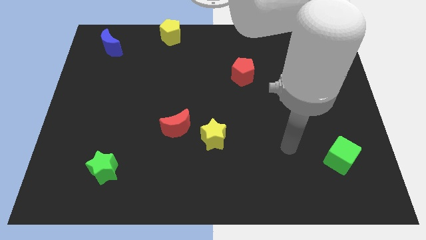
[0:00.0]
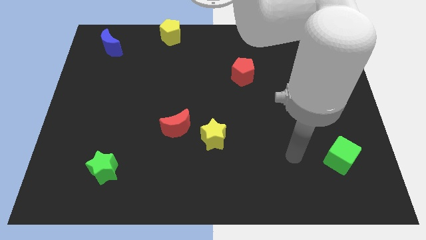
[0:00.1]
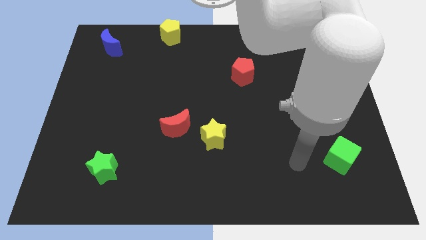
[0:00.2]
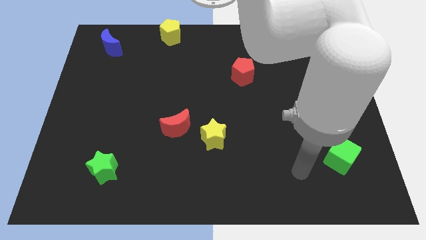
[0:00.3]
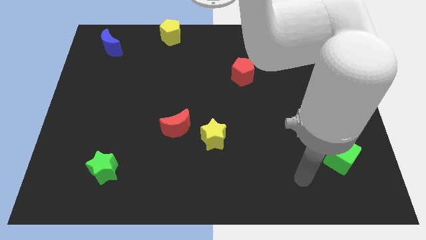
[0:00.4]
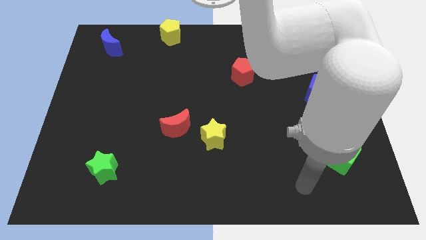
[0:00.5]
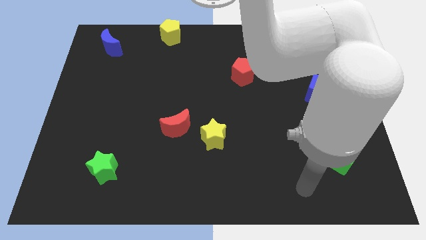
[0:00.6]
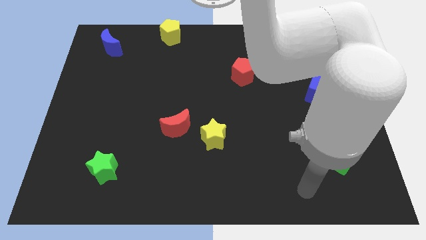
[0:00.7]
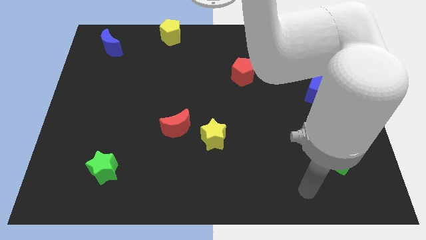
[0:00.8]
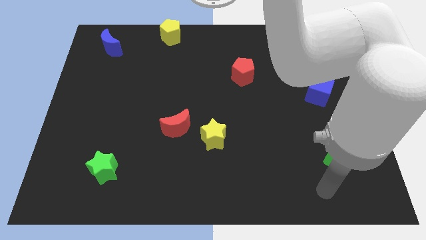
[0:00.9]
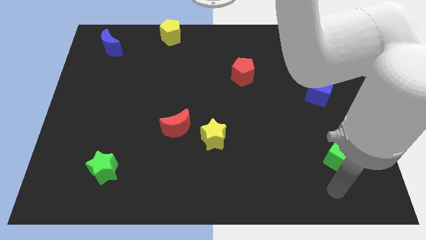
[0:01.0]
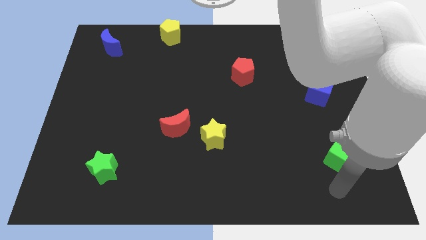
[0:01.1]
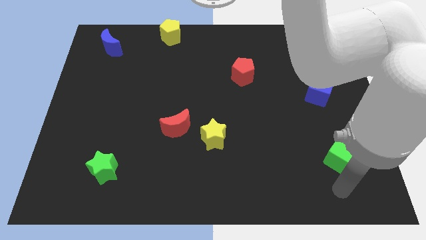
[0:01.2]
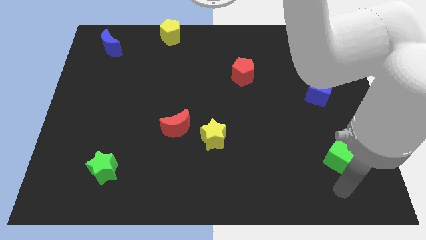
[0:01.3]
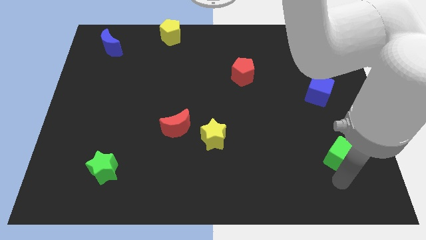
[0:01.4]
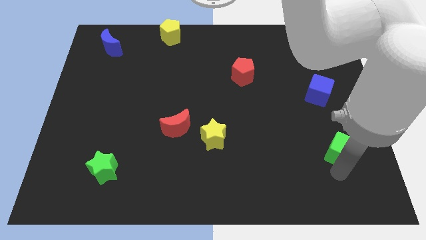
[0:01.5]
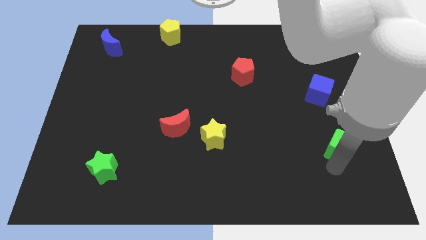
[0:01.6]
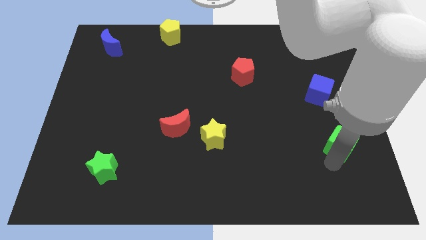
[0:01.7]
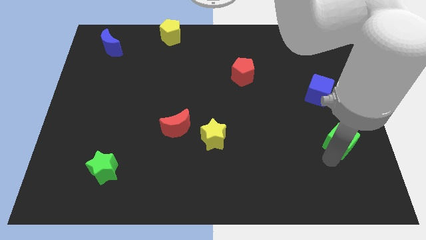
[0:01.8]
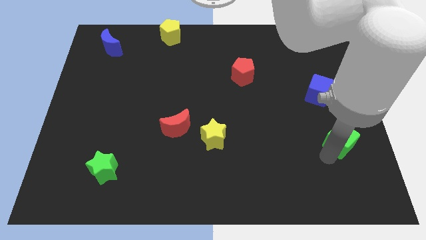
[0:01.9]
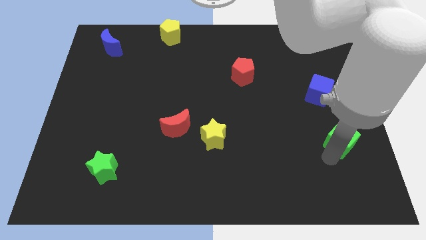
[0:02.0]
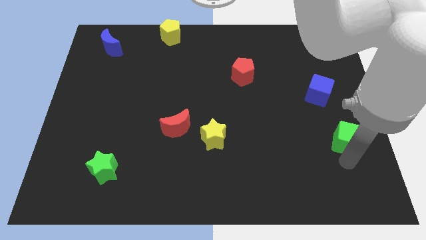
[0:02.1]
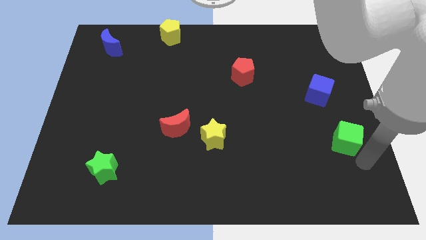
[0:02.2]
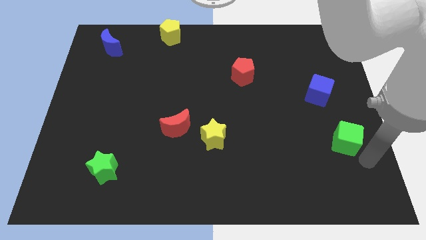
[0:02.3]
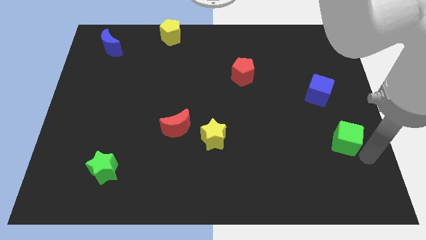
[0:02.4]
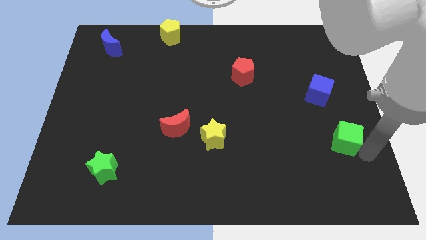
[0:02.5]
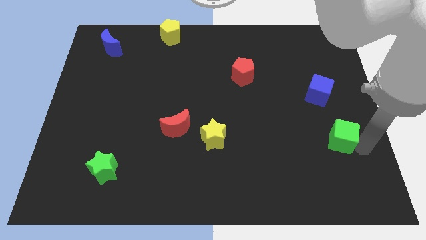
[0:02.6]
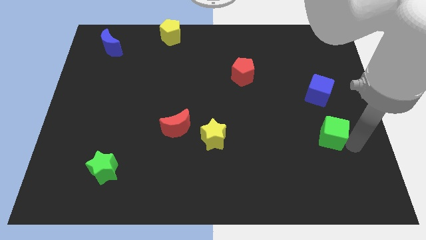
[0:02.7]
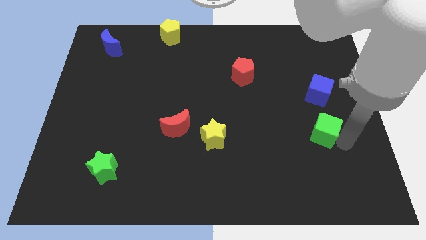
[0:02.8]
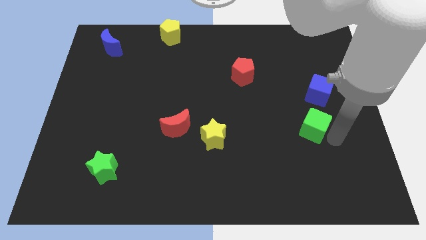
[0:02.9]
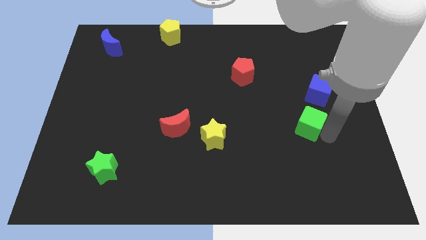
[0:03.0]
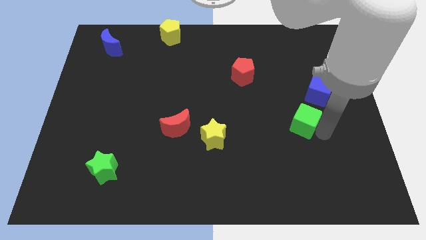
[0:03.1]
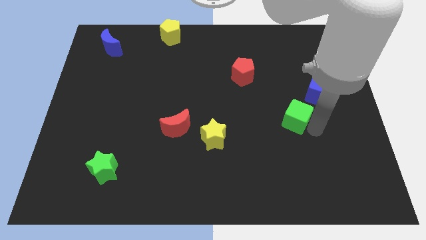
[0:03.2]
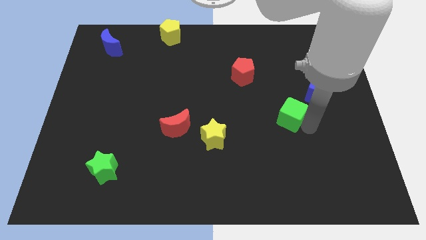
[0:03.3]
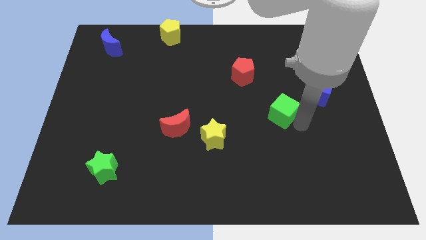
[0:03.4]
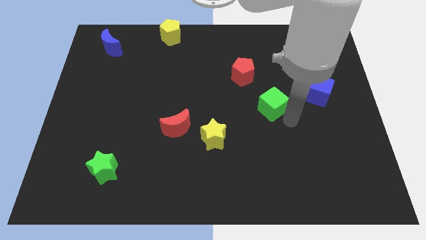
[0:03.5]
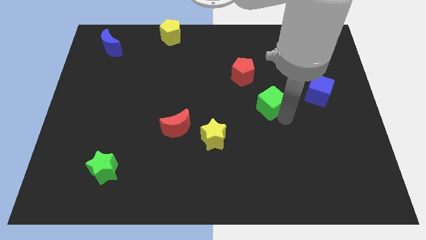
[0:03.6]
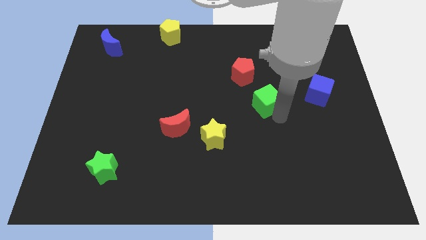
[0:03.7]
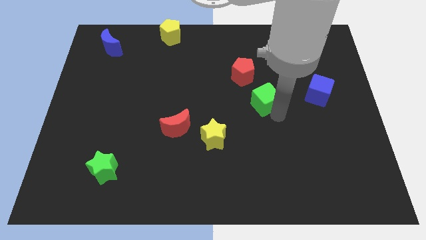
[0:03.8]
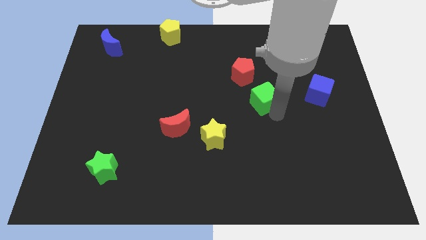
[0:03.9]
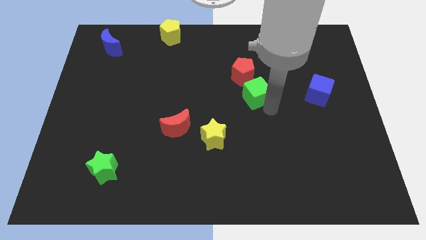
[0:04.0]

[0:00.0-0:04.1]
move the green cube towards the center of the board

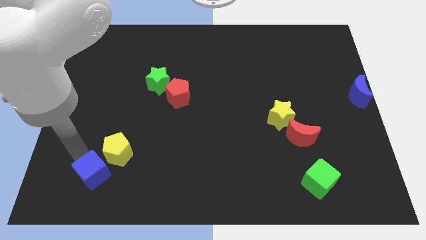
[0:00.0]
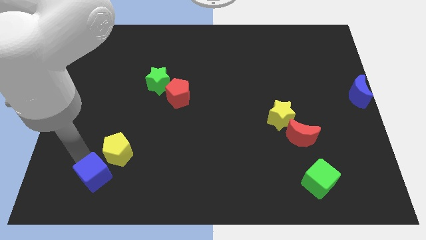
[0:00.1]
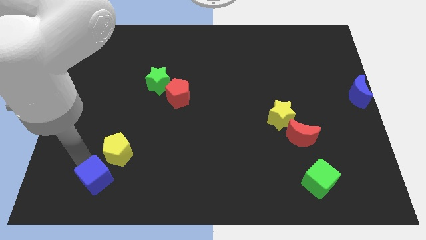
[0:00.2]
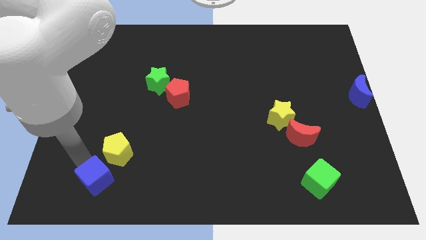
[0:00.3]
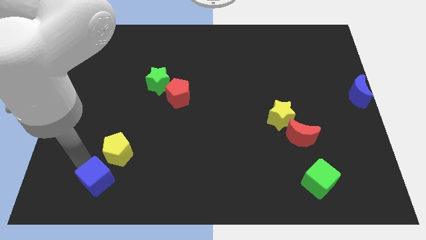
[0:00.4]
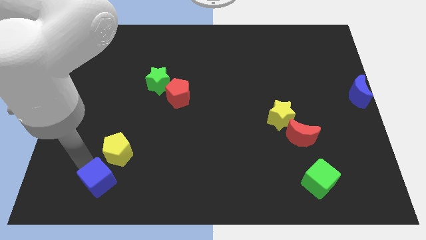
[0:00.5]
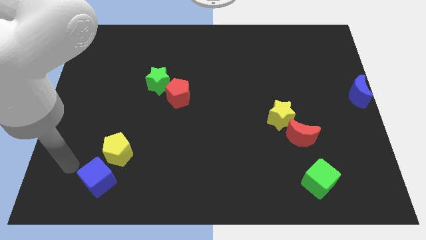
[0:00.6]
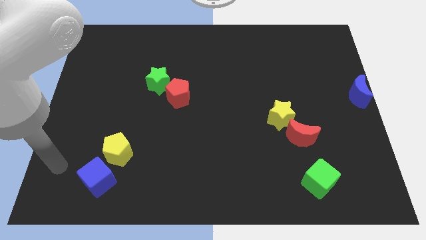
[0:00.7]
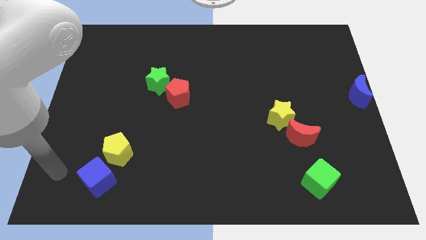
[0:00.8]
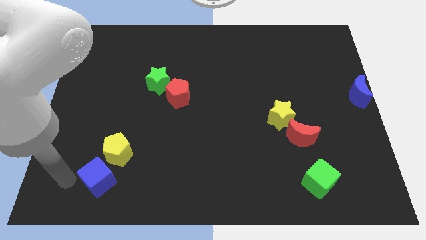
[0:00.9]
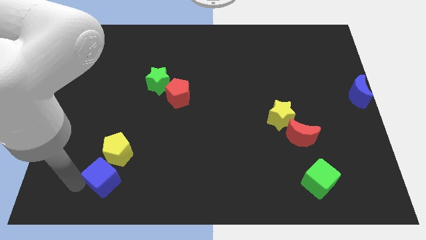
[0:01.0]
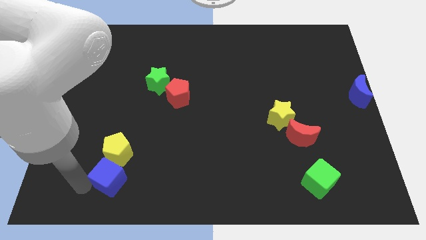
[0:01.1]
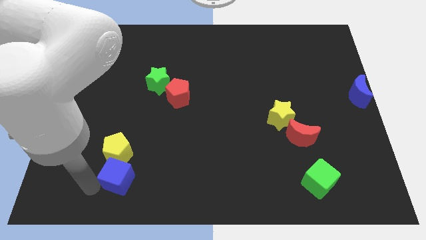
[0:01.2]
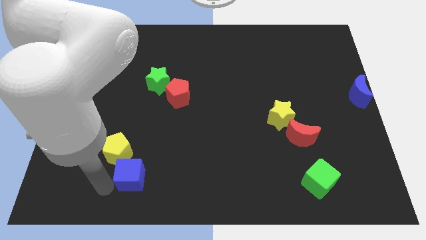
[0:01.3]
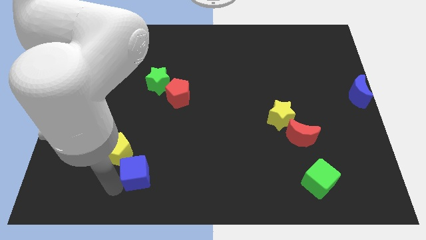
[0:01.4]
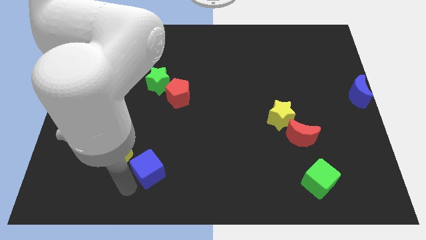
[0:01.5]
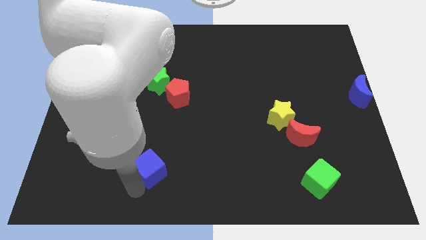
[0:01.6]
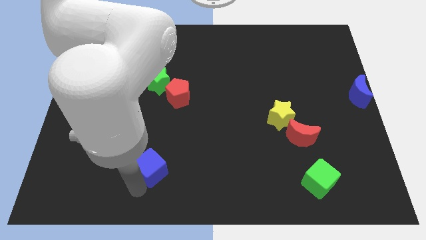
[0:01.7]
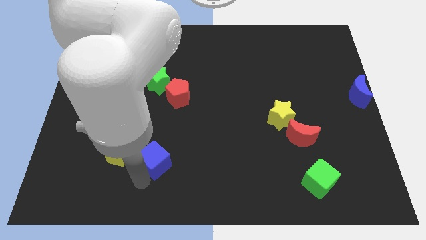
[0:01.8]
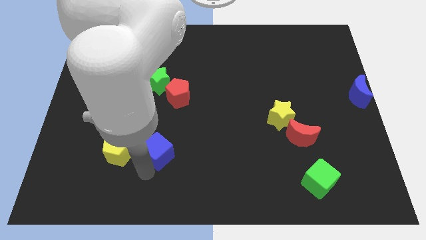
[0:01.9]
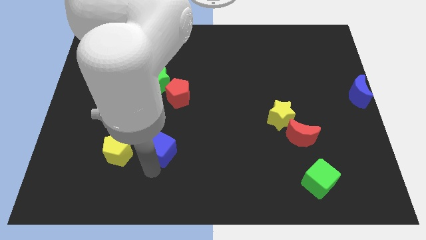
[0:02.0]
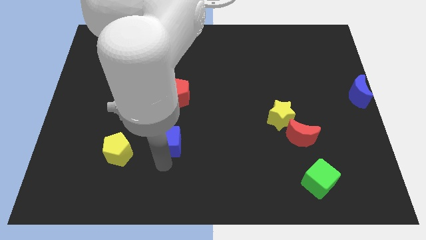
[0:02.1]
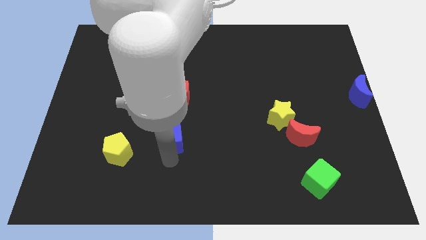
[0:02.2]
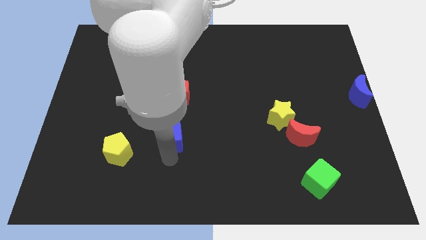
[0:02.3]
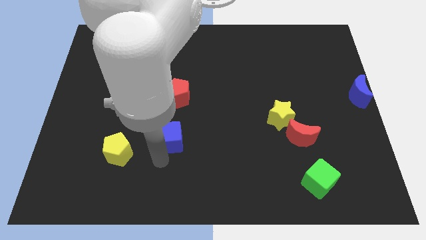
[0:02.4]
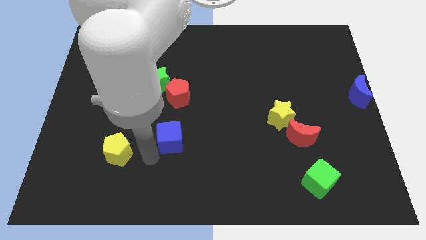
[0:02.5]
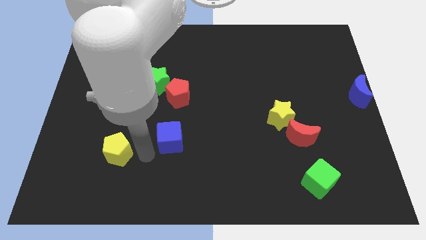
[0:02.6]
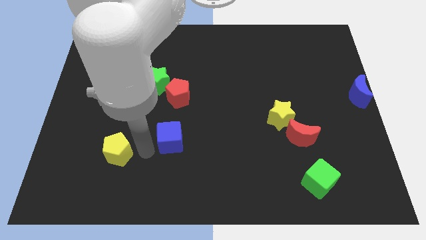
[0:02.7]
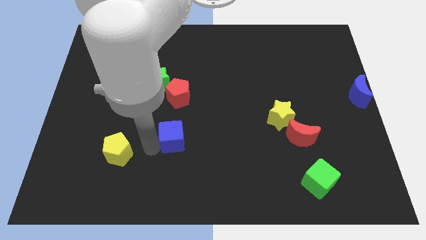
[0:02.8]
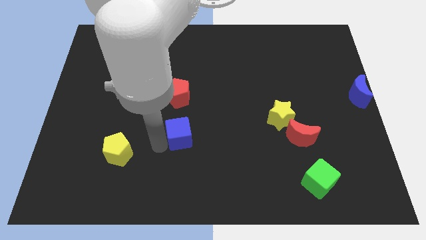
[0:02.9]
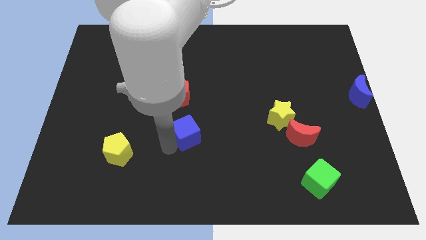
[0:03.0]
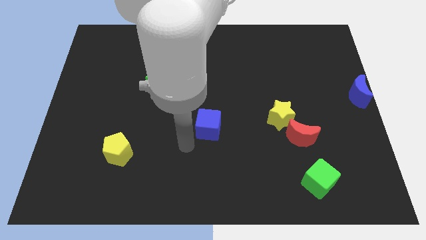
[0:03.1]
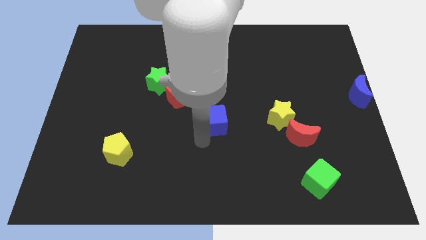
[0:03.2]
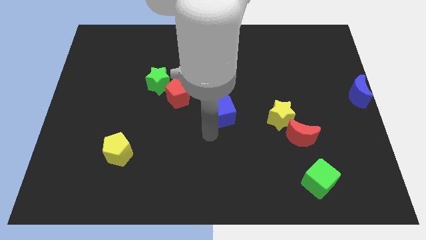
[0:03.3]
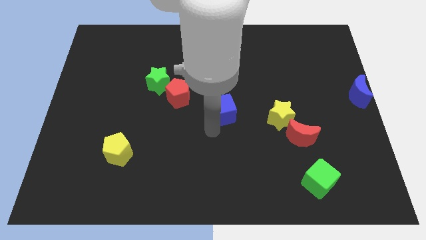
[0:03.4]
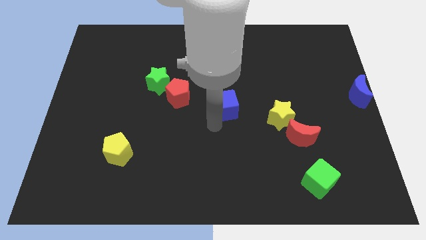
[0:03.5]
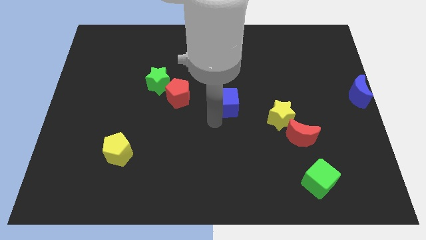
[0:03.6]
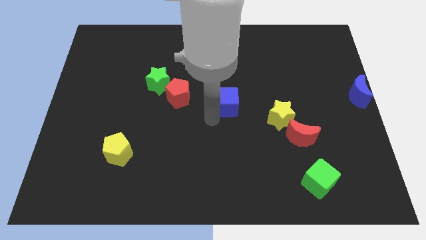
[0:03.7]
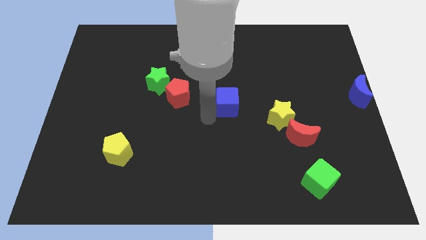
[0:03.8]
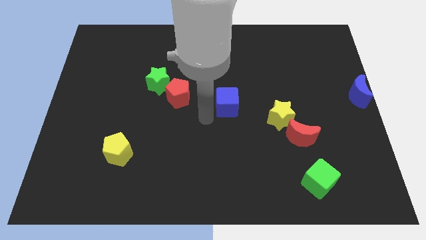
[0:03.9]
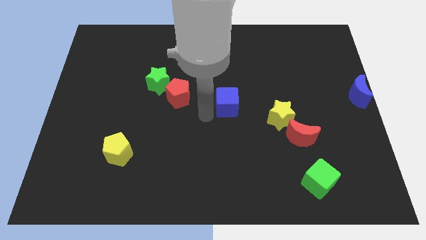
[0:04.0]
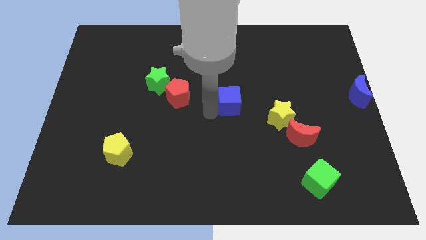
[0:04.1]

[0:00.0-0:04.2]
move the blue cube to the right of the red pentagon

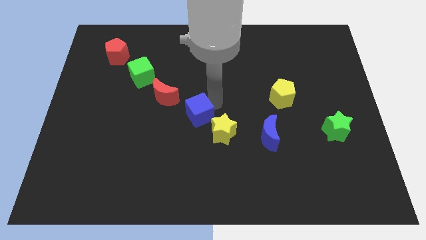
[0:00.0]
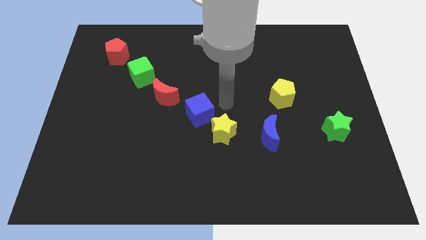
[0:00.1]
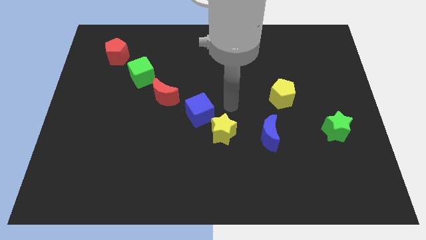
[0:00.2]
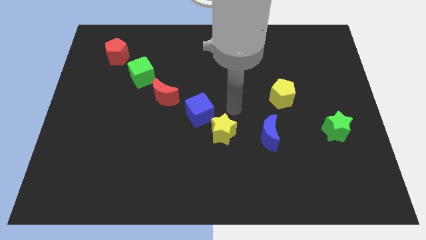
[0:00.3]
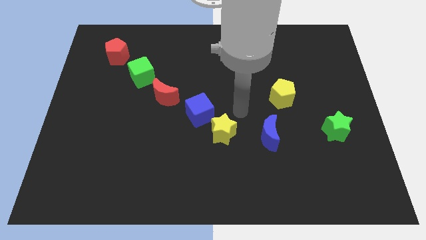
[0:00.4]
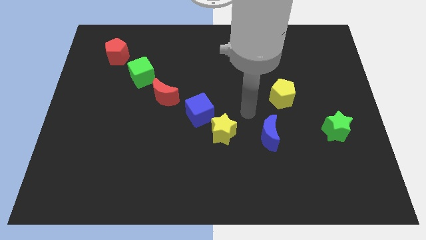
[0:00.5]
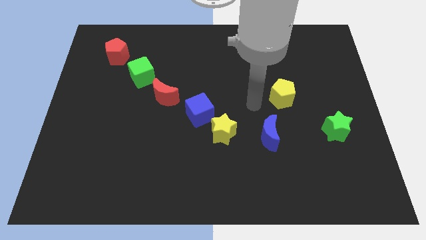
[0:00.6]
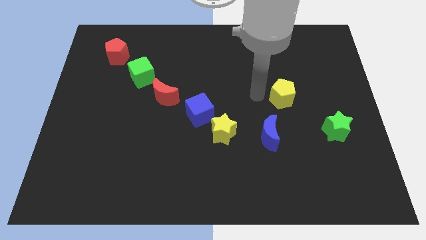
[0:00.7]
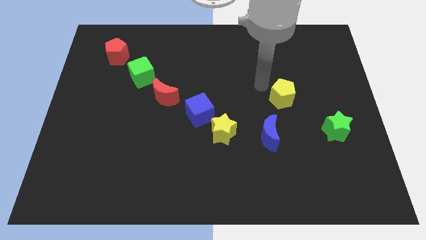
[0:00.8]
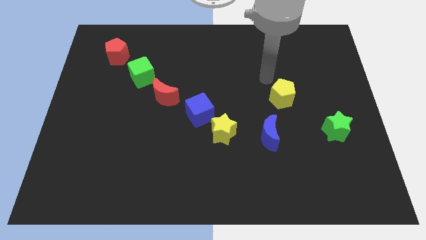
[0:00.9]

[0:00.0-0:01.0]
move the arm away from the blue cube
